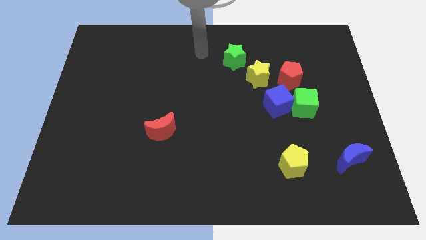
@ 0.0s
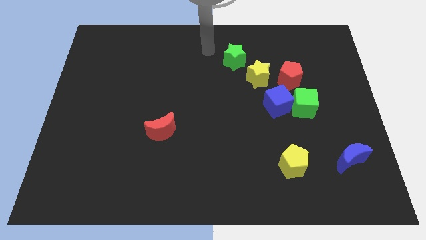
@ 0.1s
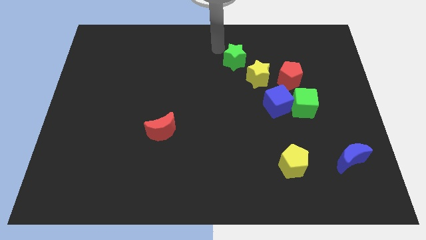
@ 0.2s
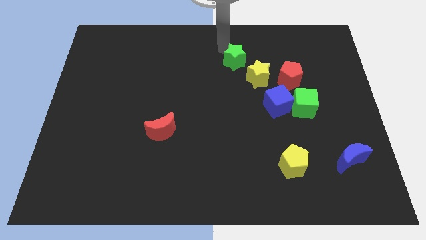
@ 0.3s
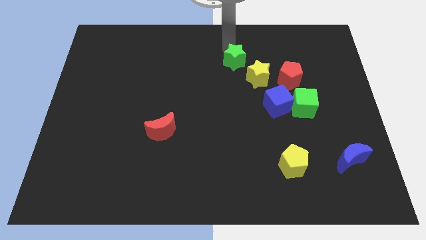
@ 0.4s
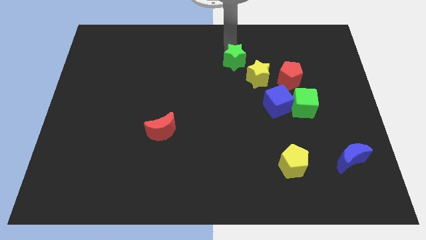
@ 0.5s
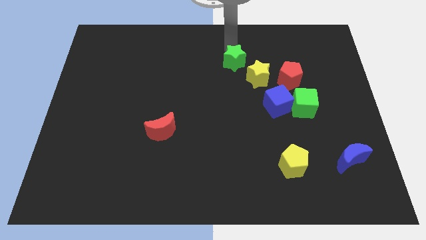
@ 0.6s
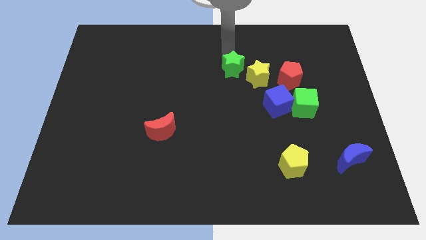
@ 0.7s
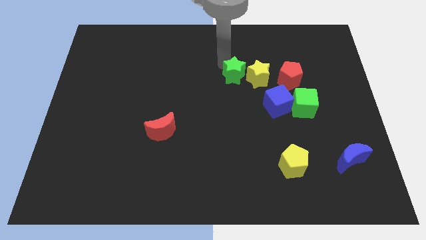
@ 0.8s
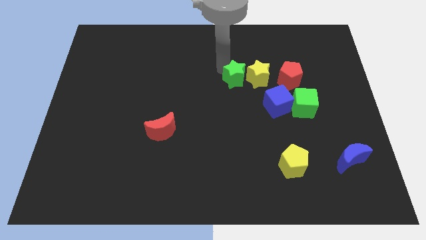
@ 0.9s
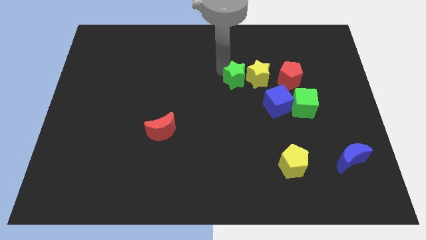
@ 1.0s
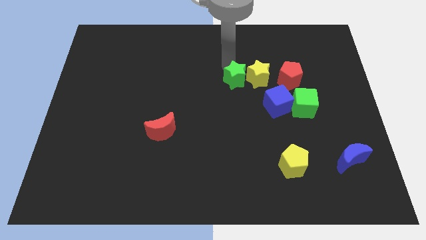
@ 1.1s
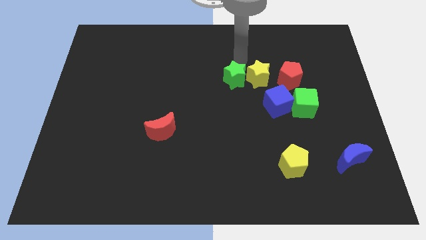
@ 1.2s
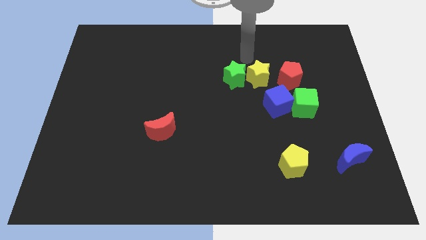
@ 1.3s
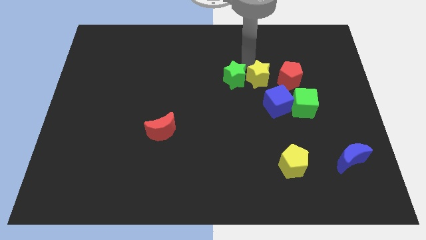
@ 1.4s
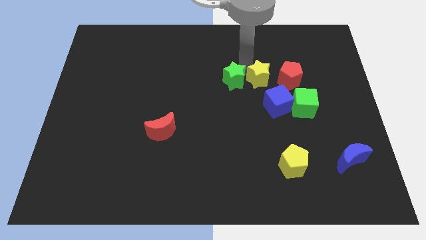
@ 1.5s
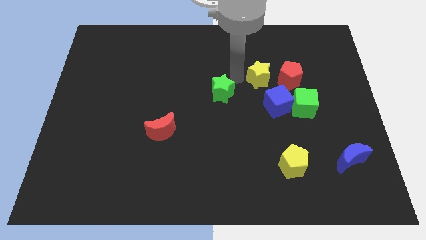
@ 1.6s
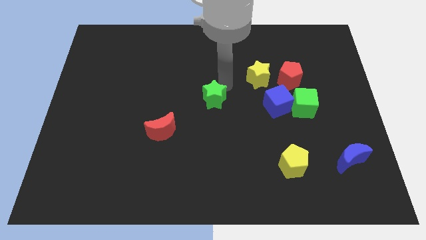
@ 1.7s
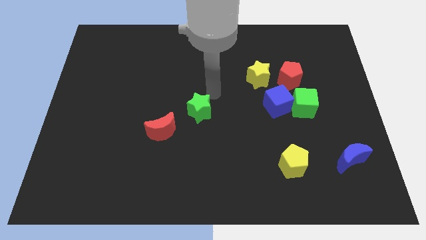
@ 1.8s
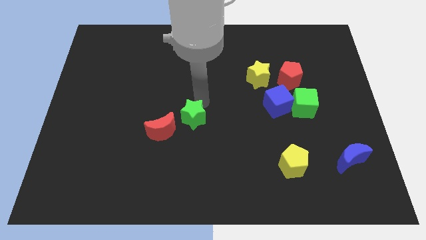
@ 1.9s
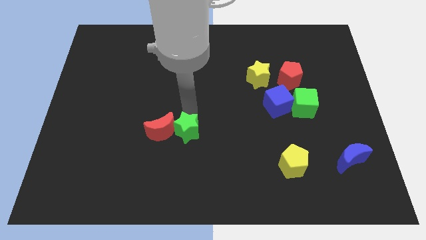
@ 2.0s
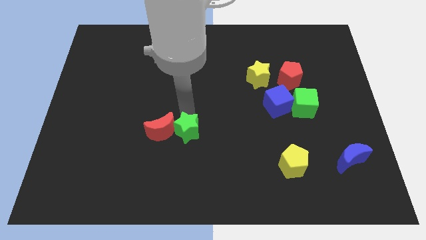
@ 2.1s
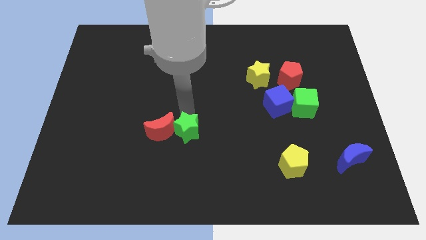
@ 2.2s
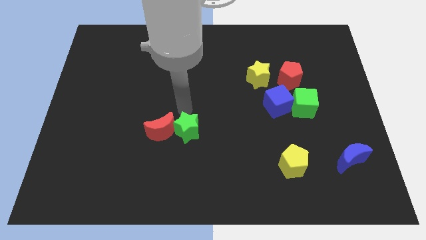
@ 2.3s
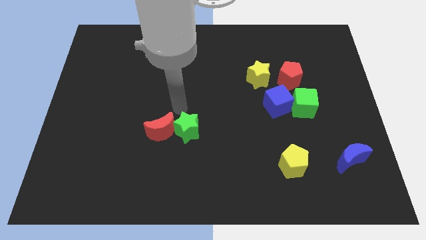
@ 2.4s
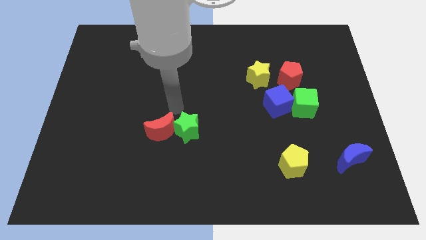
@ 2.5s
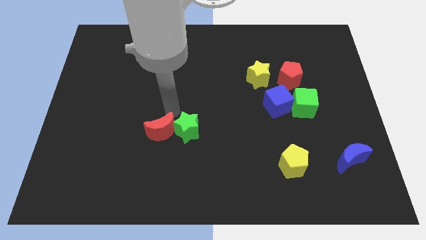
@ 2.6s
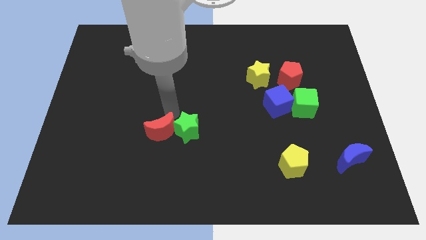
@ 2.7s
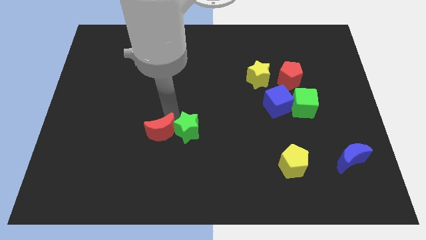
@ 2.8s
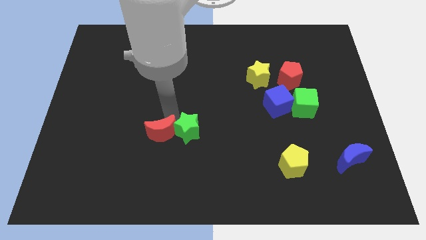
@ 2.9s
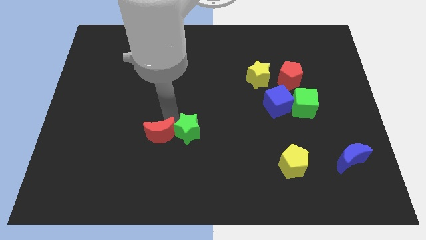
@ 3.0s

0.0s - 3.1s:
move the green star horizontal to the right of the red crescent

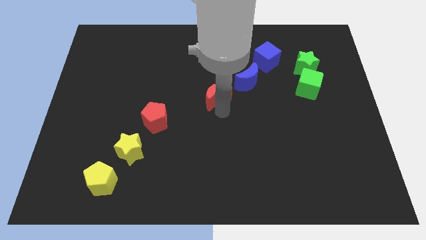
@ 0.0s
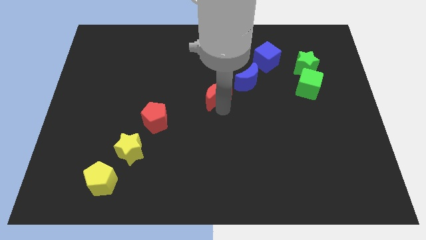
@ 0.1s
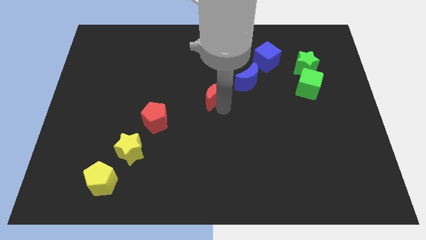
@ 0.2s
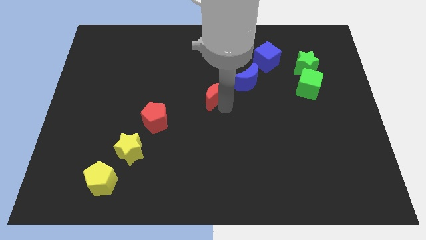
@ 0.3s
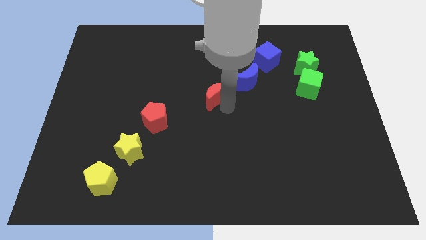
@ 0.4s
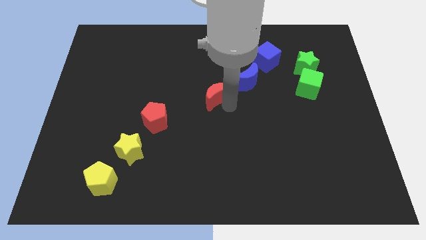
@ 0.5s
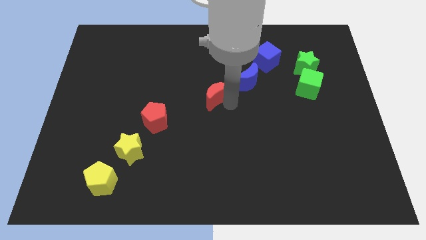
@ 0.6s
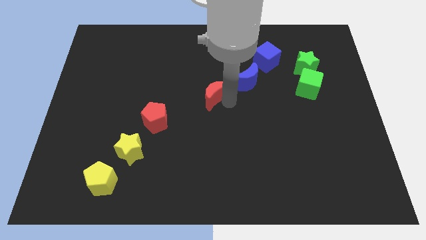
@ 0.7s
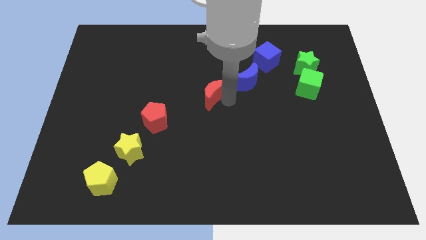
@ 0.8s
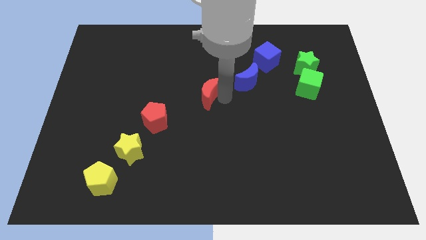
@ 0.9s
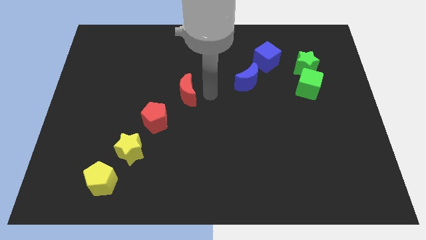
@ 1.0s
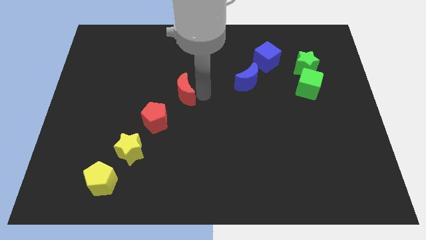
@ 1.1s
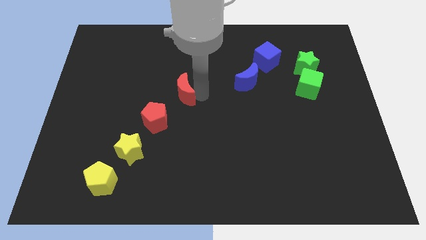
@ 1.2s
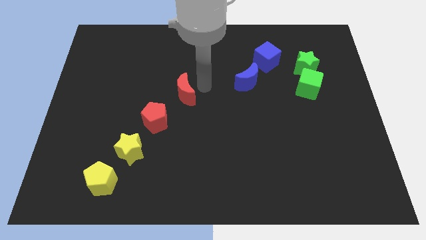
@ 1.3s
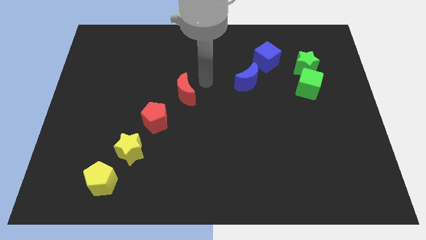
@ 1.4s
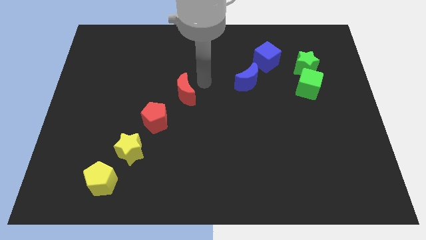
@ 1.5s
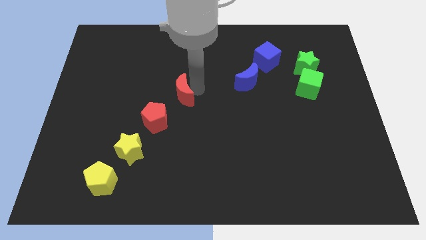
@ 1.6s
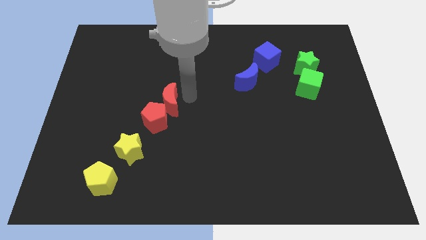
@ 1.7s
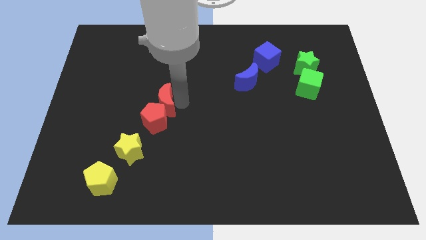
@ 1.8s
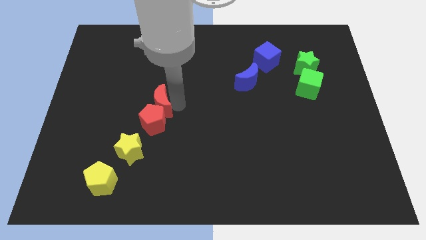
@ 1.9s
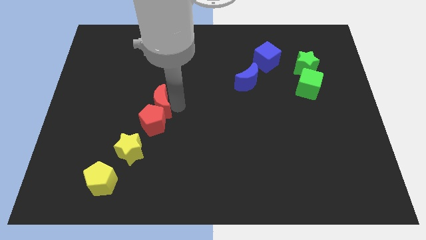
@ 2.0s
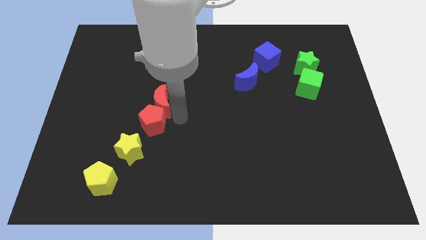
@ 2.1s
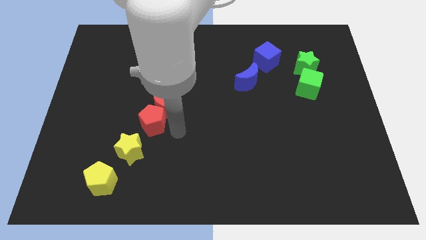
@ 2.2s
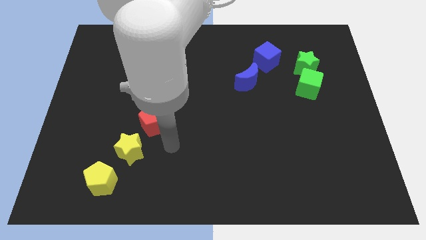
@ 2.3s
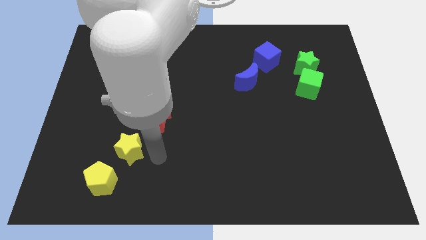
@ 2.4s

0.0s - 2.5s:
push the red moon into red pentagon

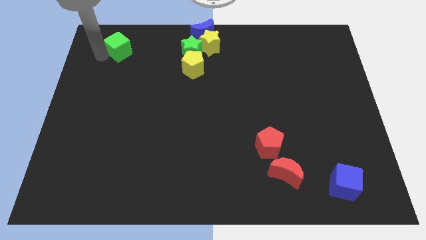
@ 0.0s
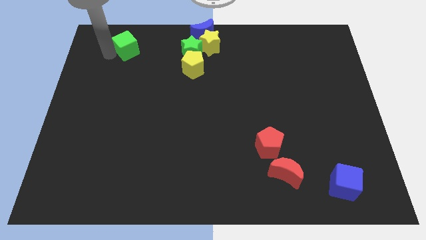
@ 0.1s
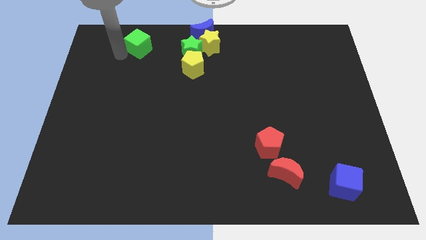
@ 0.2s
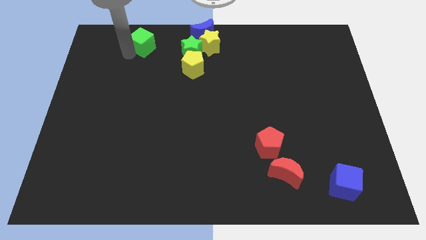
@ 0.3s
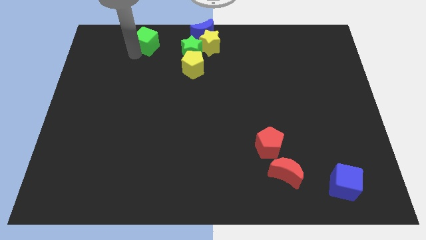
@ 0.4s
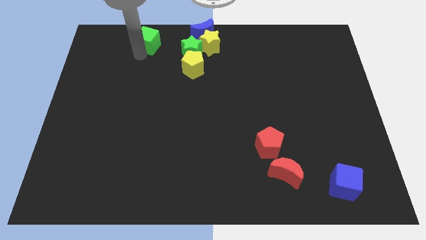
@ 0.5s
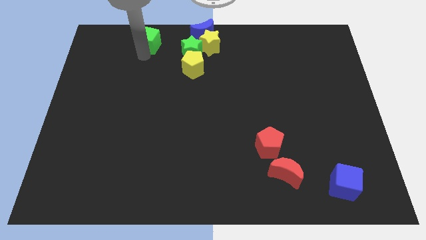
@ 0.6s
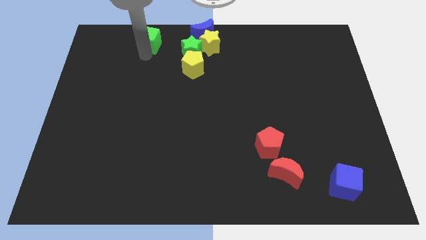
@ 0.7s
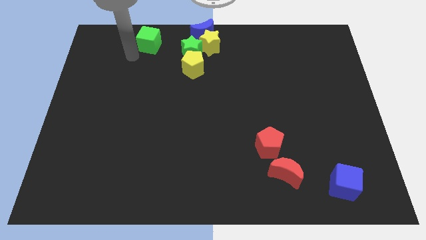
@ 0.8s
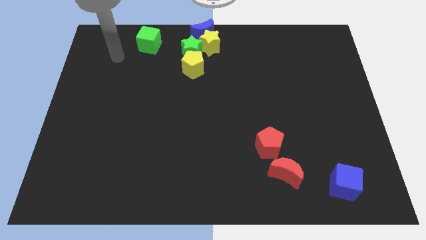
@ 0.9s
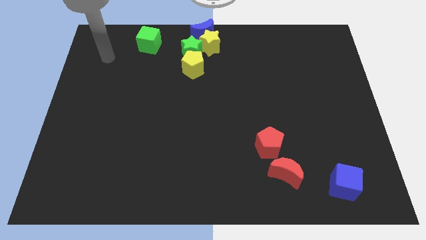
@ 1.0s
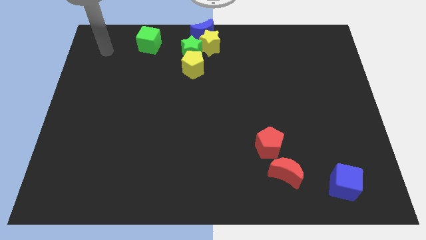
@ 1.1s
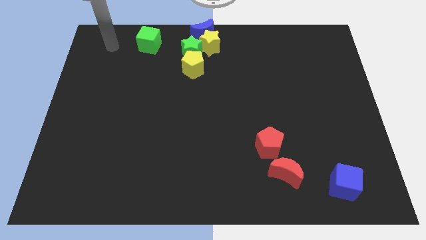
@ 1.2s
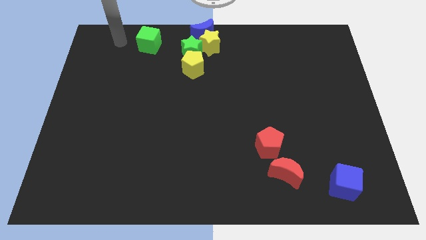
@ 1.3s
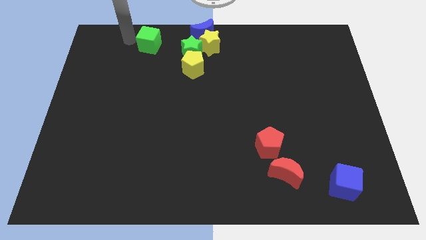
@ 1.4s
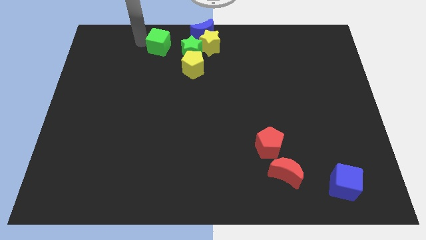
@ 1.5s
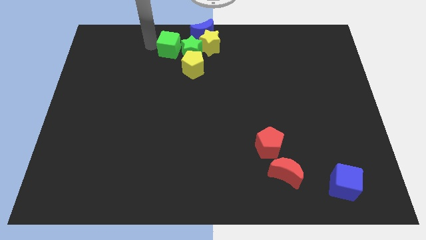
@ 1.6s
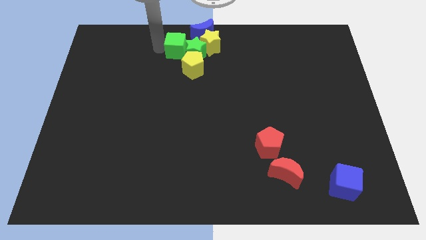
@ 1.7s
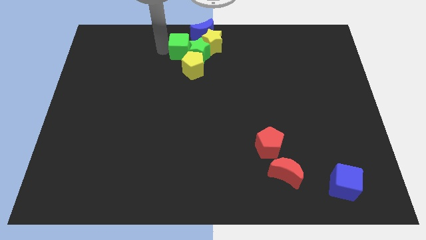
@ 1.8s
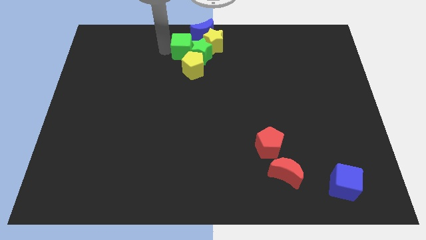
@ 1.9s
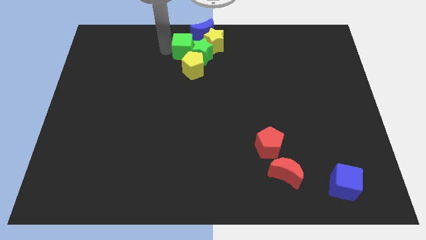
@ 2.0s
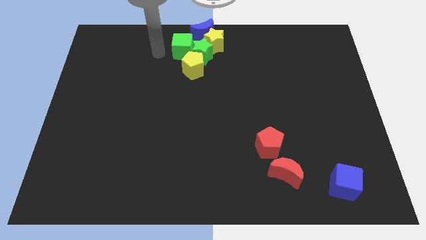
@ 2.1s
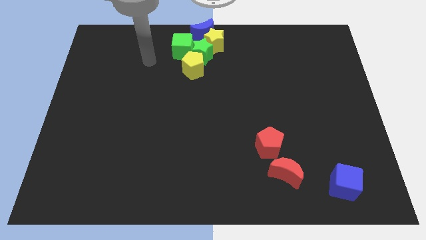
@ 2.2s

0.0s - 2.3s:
push the green cube into green star

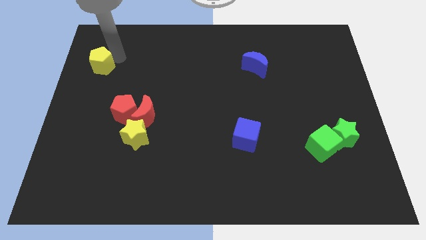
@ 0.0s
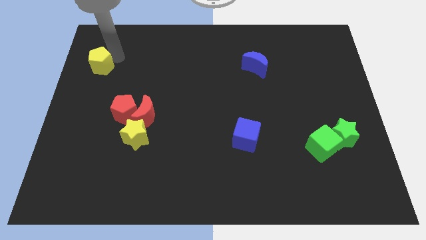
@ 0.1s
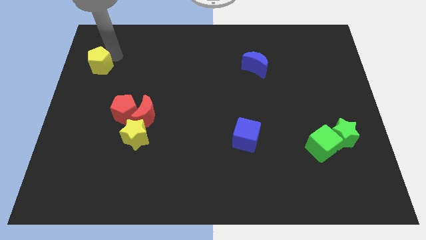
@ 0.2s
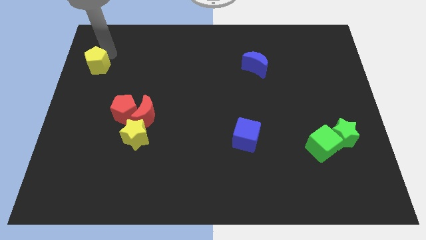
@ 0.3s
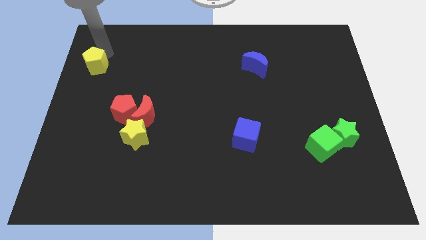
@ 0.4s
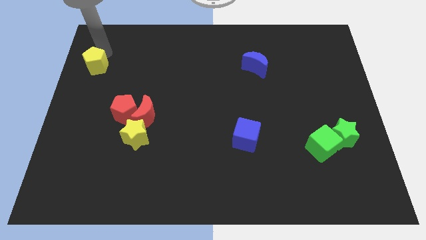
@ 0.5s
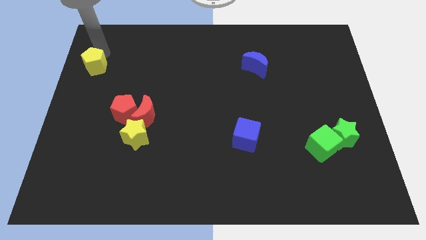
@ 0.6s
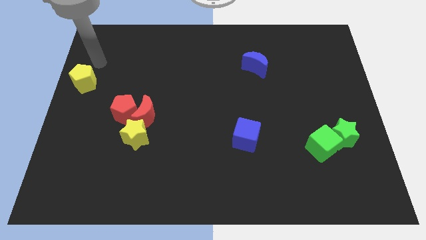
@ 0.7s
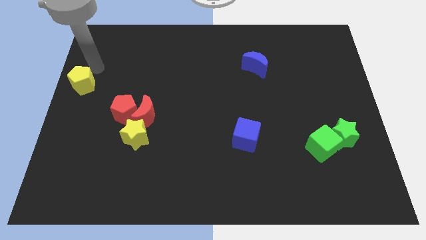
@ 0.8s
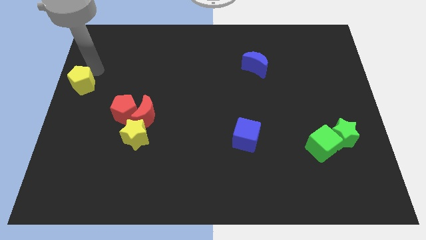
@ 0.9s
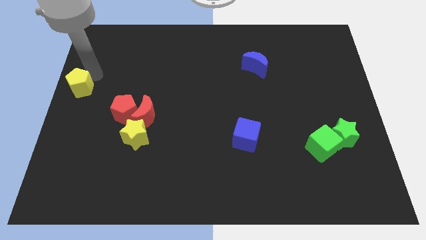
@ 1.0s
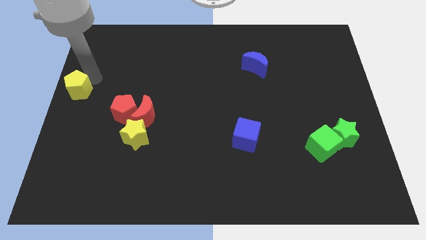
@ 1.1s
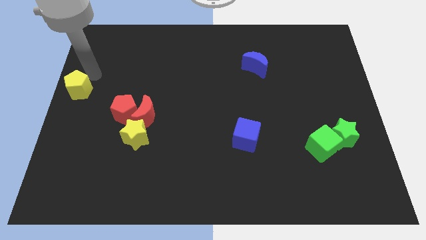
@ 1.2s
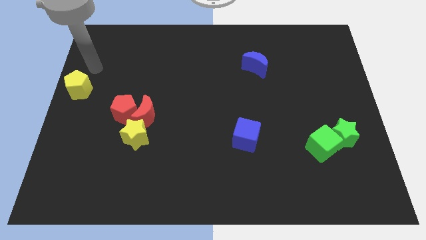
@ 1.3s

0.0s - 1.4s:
move the yellow pentagon to left of the red pentagon
